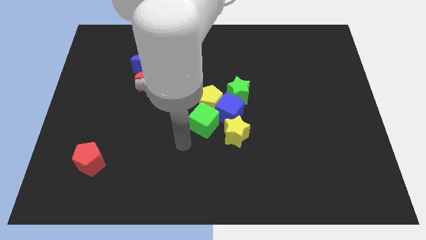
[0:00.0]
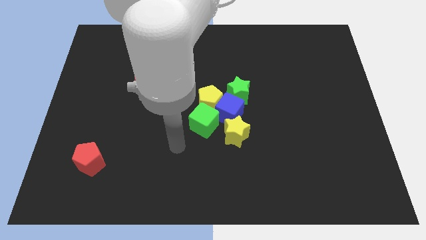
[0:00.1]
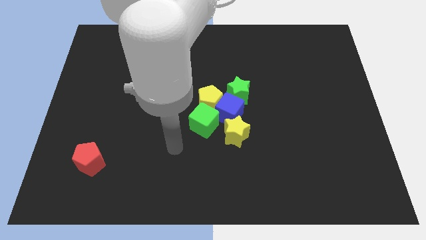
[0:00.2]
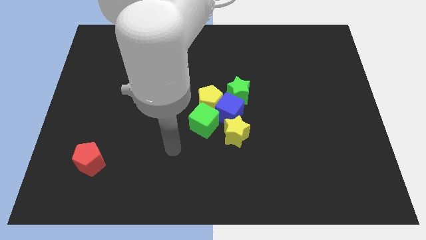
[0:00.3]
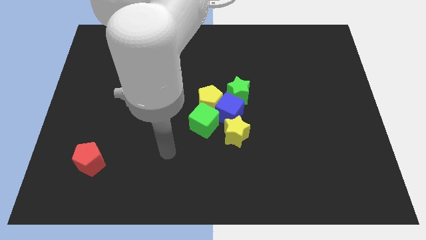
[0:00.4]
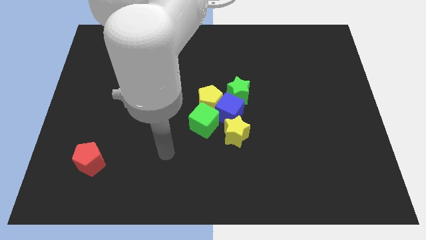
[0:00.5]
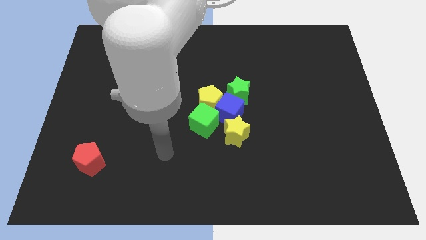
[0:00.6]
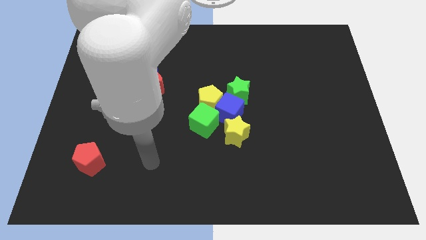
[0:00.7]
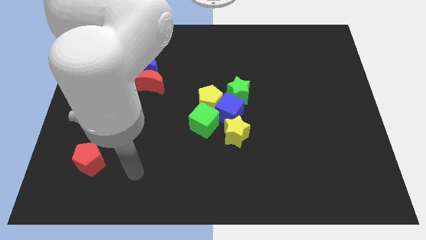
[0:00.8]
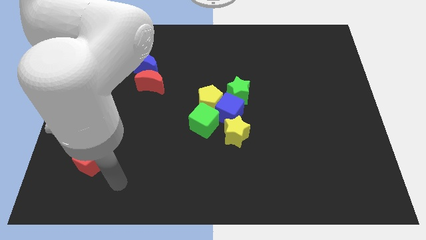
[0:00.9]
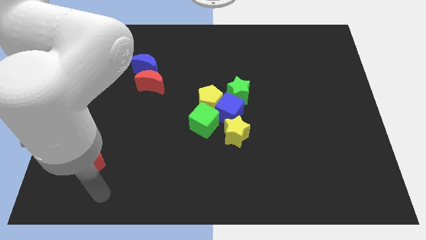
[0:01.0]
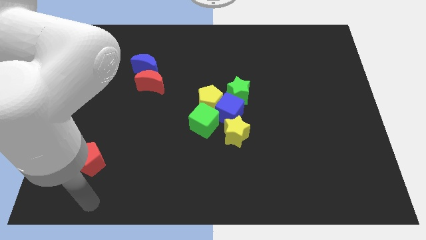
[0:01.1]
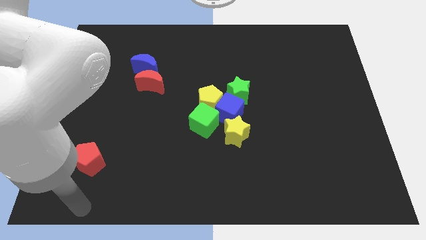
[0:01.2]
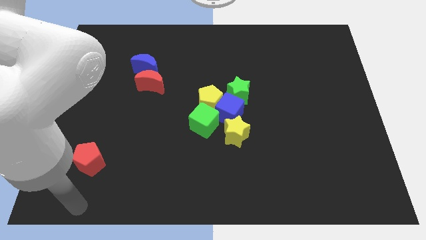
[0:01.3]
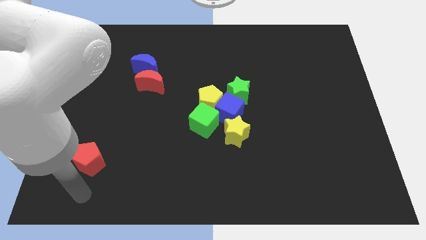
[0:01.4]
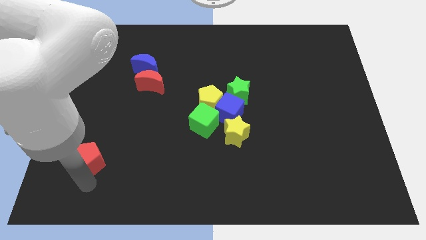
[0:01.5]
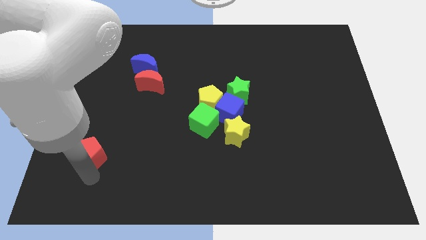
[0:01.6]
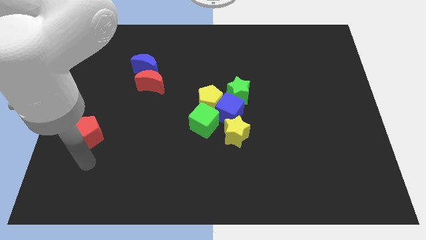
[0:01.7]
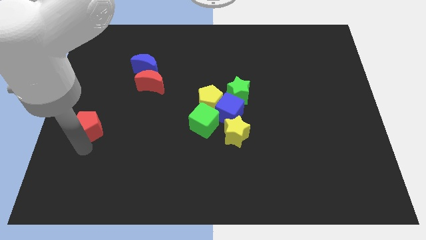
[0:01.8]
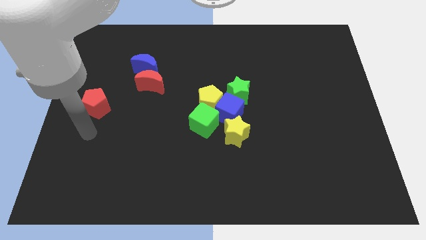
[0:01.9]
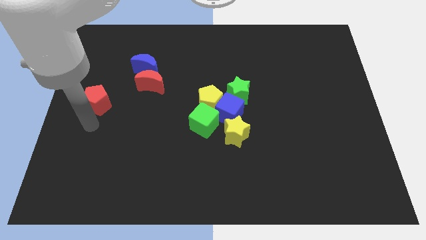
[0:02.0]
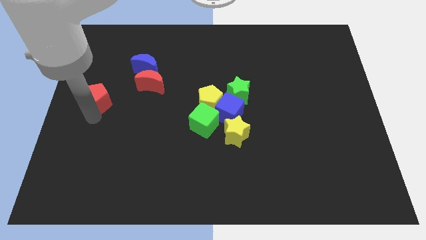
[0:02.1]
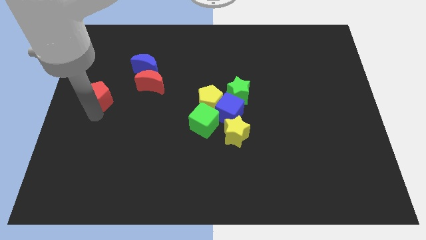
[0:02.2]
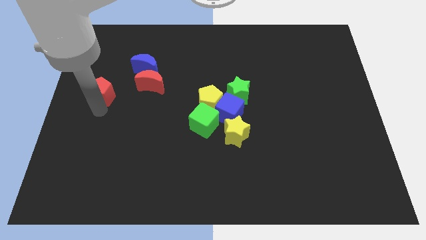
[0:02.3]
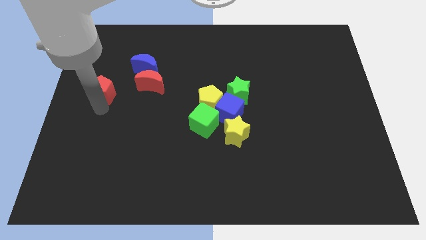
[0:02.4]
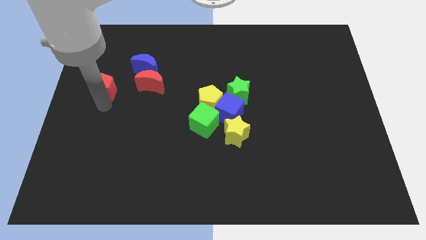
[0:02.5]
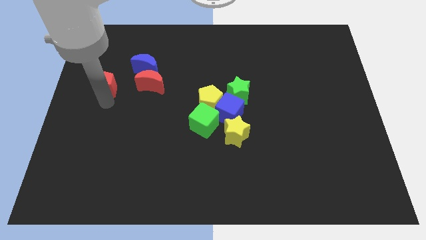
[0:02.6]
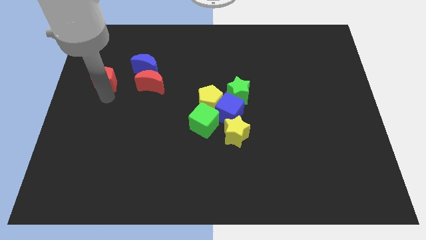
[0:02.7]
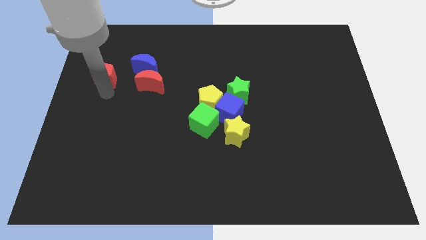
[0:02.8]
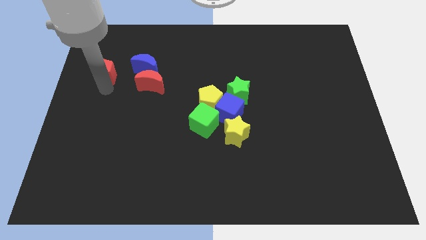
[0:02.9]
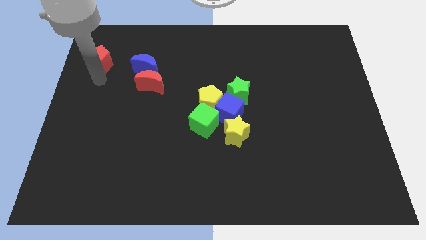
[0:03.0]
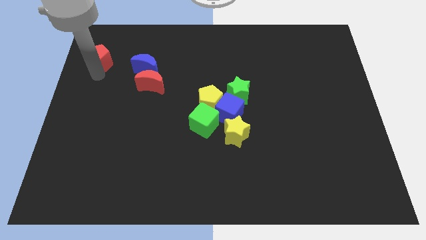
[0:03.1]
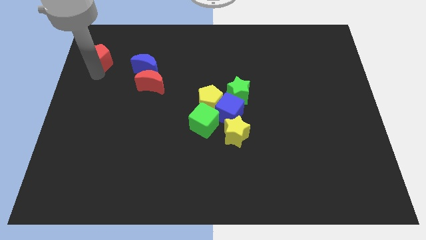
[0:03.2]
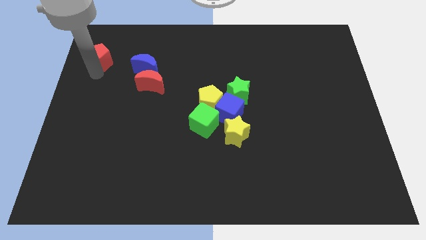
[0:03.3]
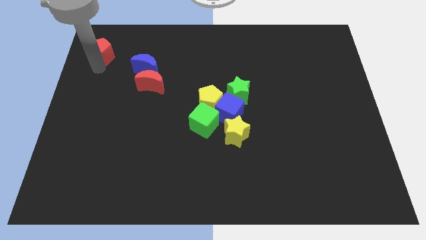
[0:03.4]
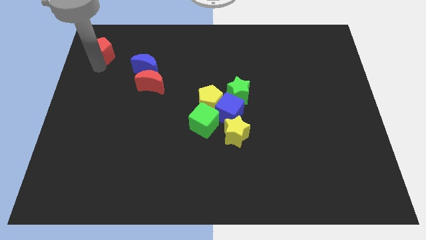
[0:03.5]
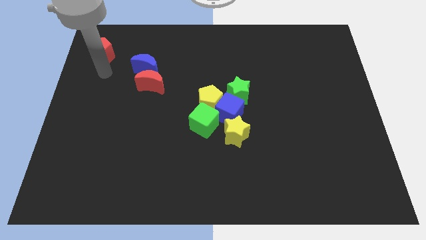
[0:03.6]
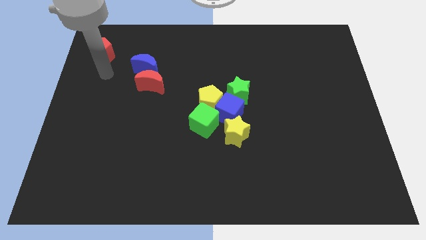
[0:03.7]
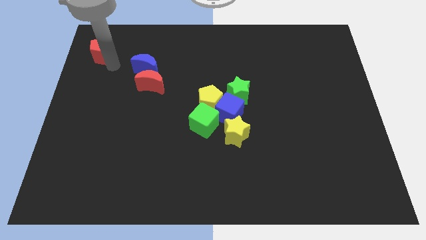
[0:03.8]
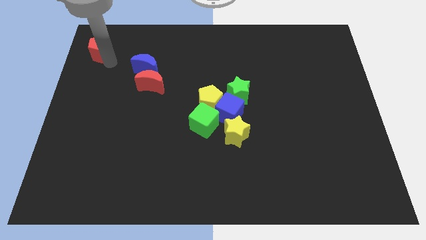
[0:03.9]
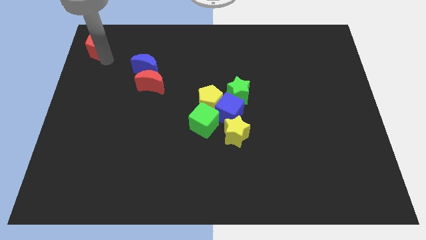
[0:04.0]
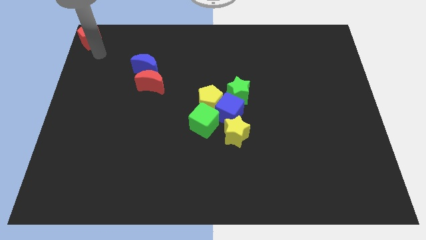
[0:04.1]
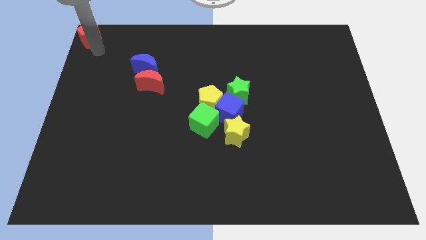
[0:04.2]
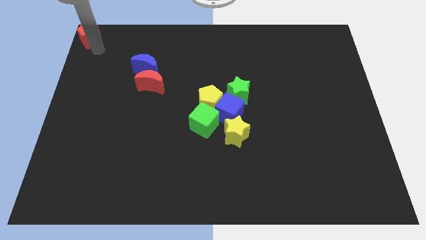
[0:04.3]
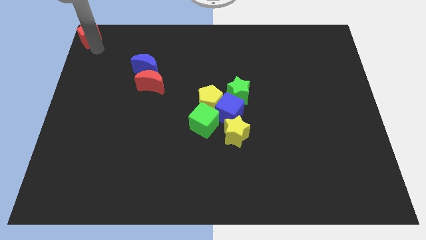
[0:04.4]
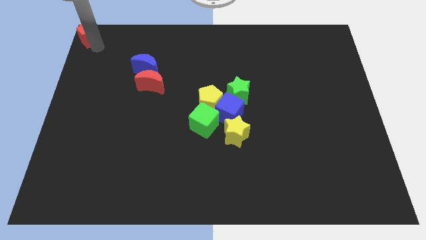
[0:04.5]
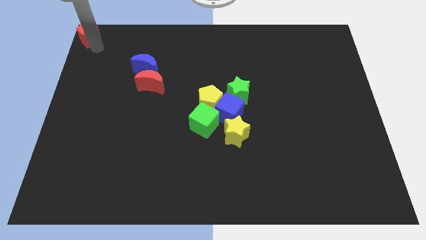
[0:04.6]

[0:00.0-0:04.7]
push the red pentagon towards the top left corner of the board

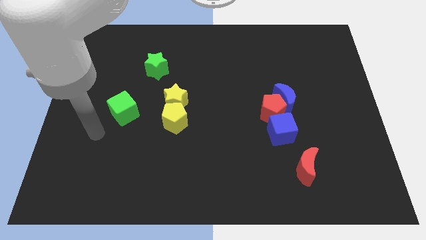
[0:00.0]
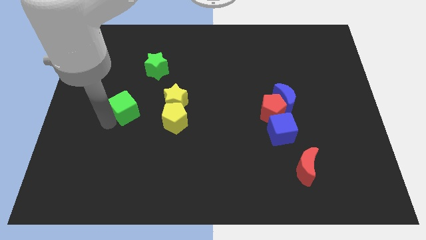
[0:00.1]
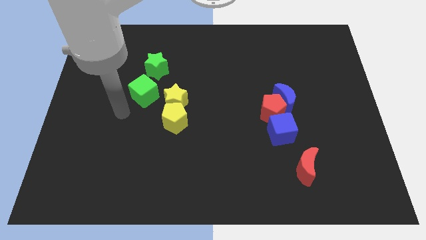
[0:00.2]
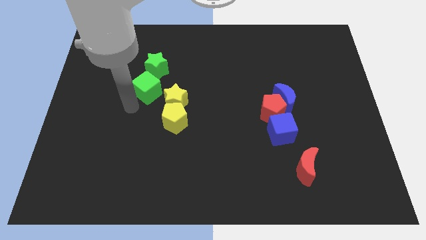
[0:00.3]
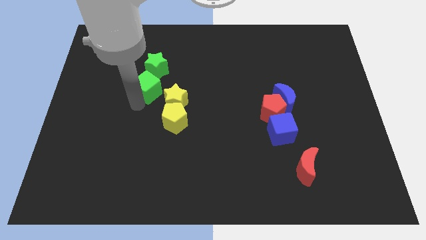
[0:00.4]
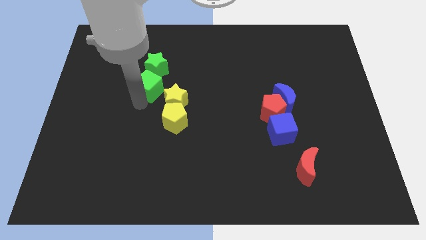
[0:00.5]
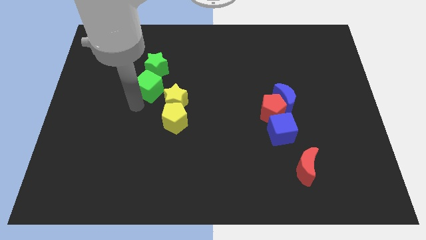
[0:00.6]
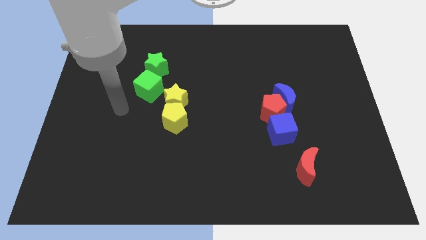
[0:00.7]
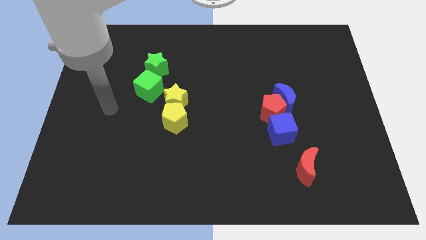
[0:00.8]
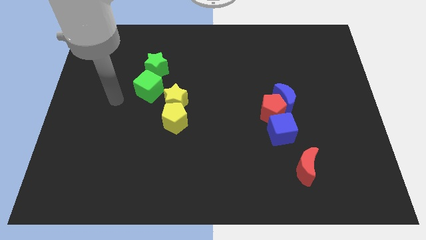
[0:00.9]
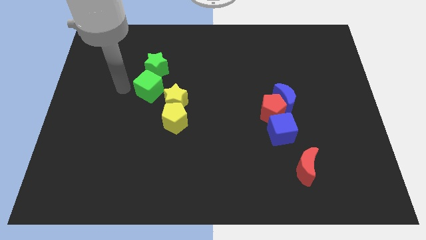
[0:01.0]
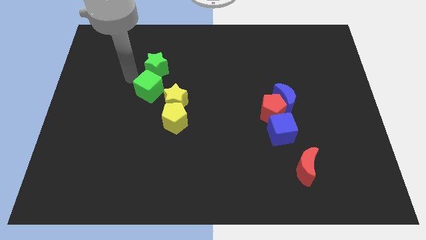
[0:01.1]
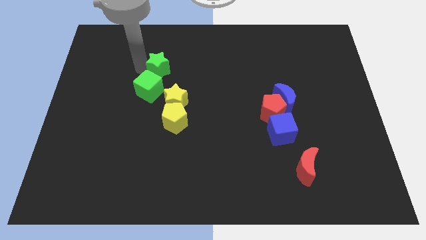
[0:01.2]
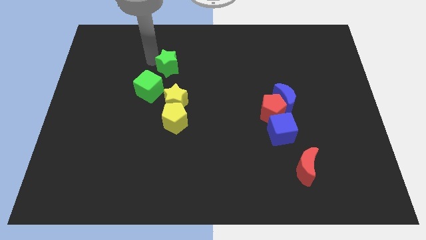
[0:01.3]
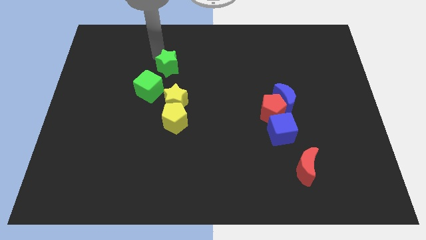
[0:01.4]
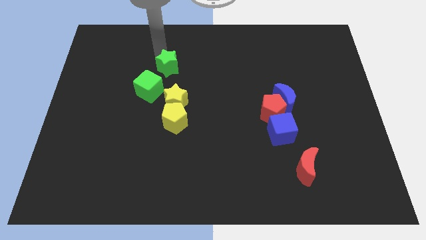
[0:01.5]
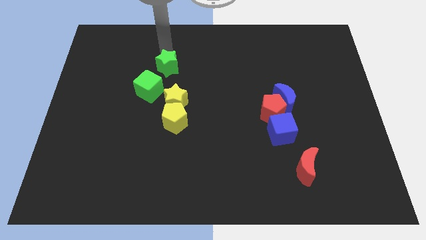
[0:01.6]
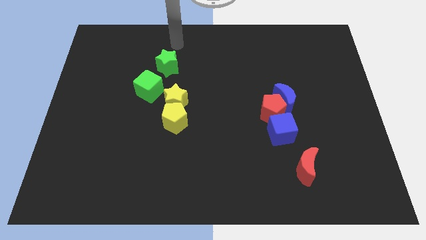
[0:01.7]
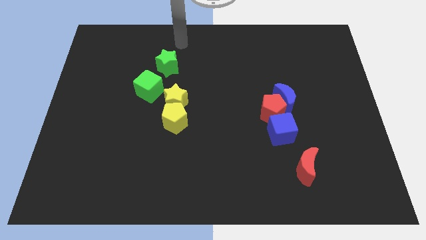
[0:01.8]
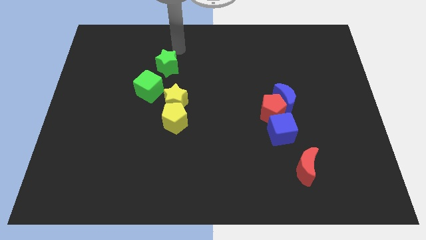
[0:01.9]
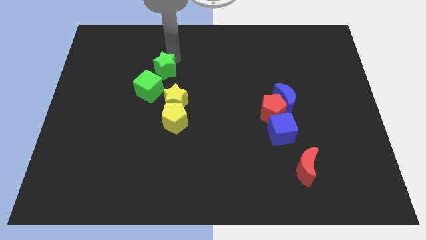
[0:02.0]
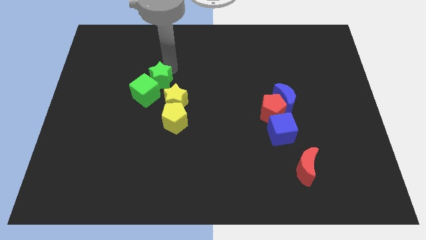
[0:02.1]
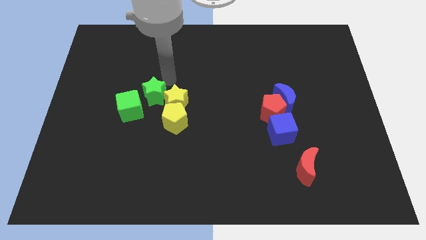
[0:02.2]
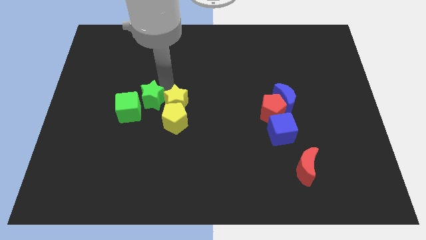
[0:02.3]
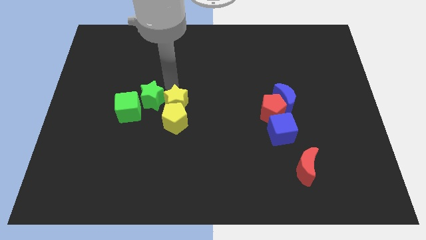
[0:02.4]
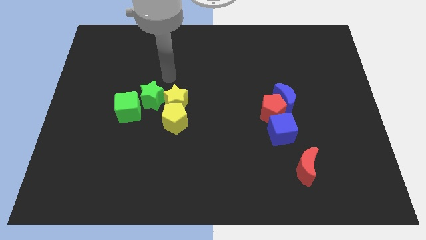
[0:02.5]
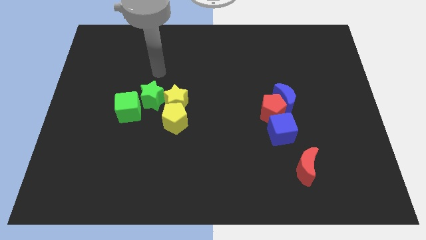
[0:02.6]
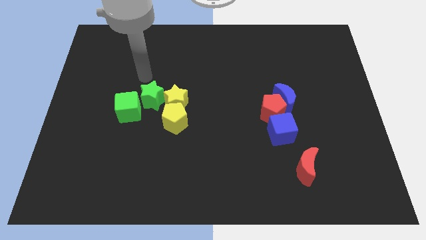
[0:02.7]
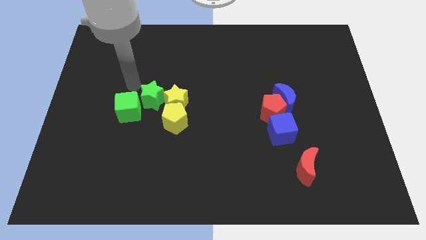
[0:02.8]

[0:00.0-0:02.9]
place green star to the right side of green cube

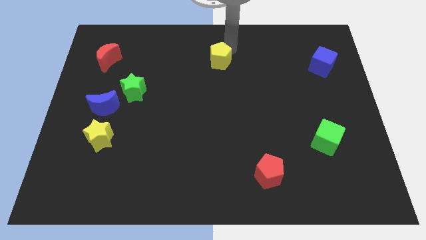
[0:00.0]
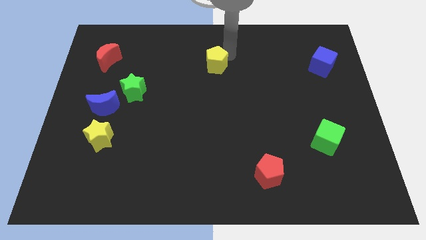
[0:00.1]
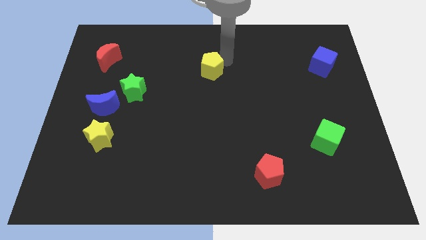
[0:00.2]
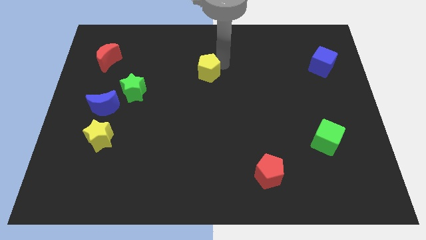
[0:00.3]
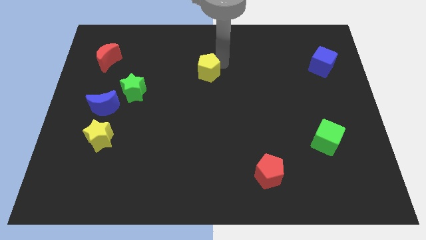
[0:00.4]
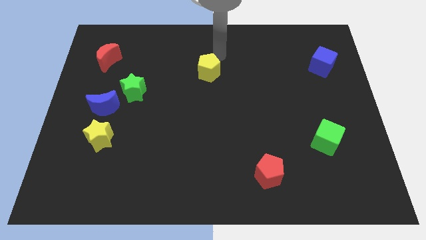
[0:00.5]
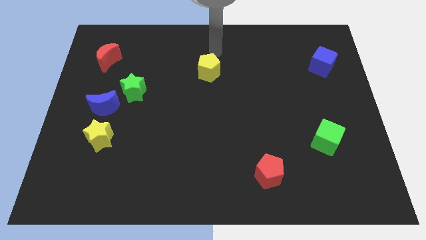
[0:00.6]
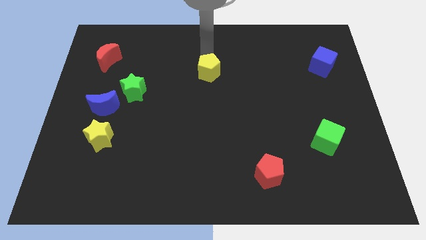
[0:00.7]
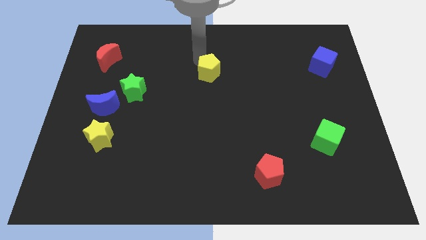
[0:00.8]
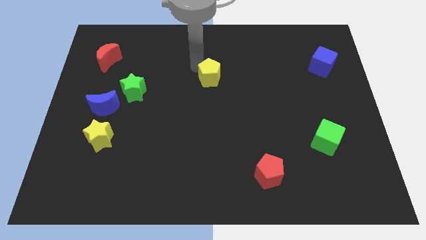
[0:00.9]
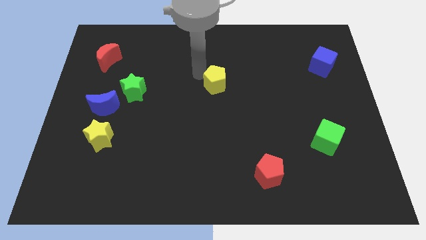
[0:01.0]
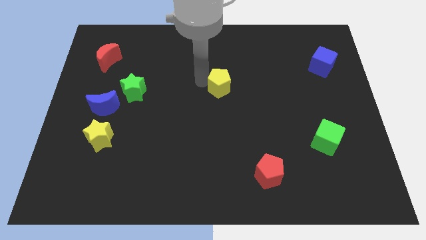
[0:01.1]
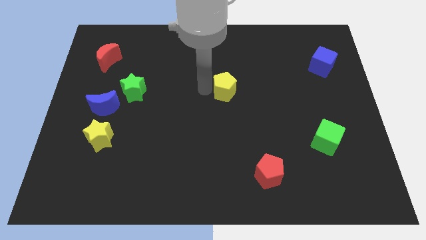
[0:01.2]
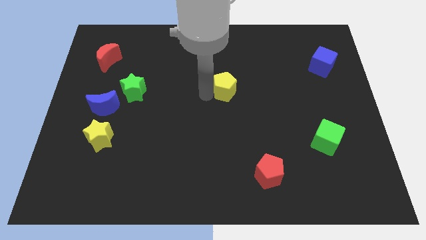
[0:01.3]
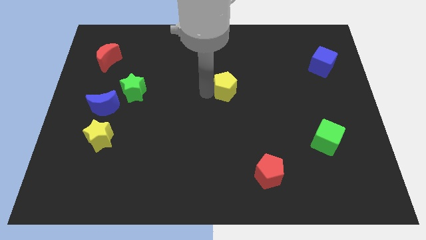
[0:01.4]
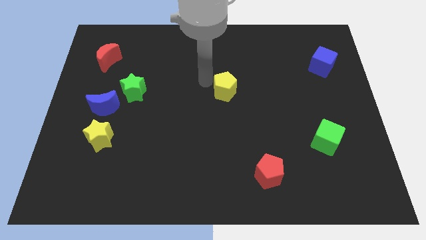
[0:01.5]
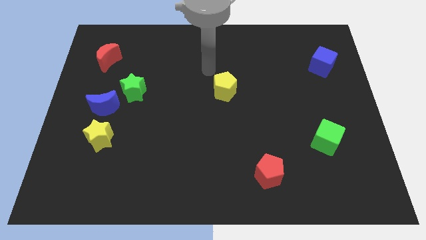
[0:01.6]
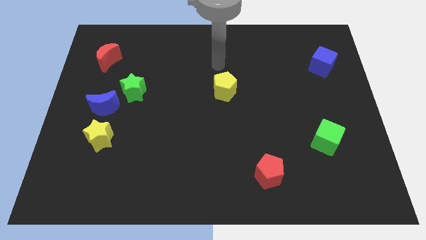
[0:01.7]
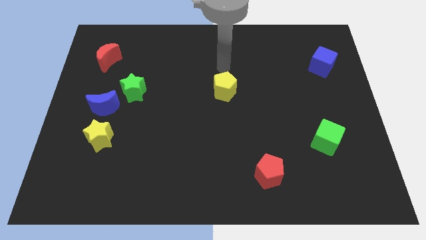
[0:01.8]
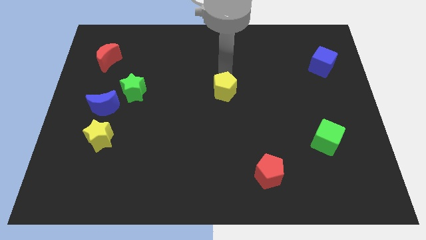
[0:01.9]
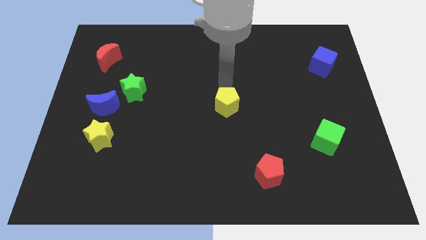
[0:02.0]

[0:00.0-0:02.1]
place the yellow penatgon to center of the board
